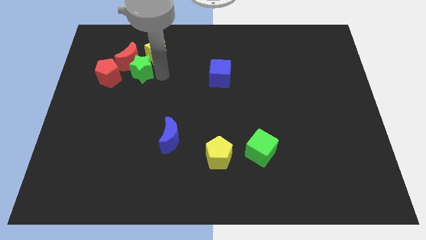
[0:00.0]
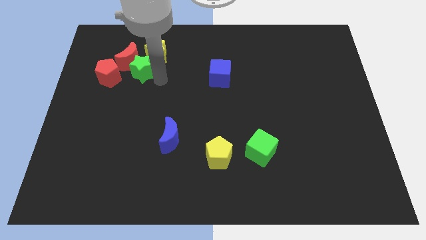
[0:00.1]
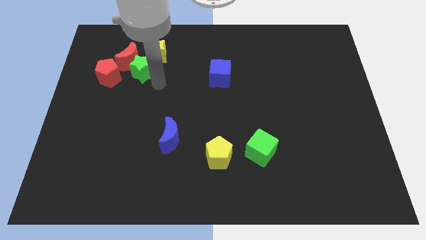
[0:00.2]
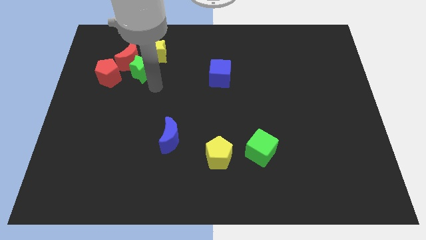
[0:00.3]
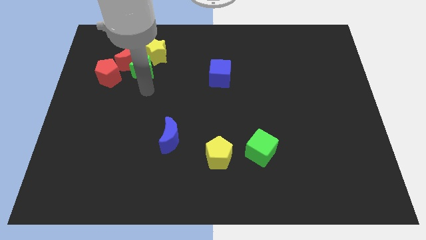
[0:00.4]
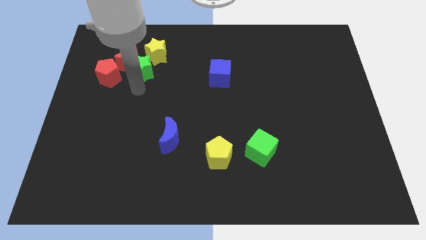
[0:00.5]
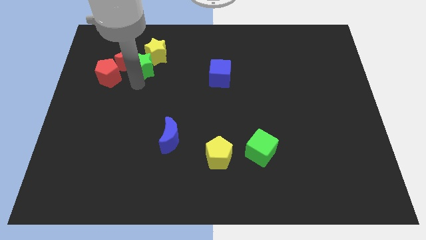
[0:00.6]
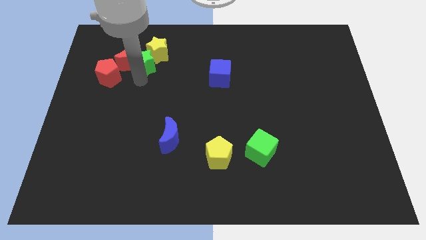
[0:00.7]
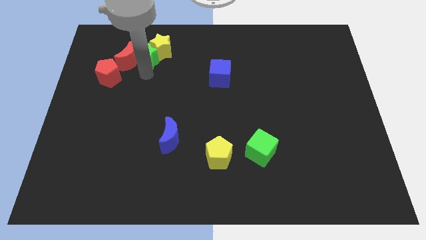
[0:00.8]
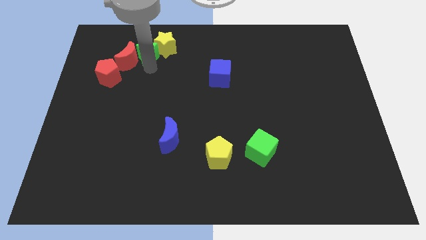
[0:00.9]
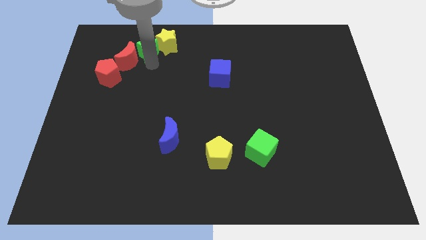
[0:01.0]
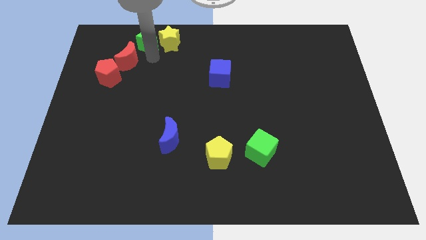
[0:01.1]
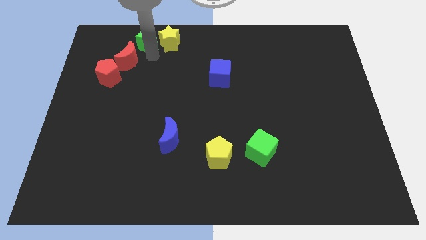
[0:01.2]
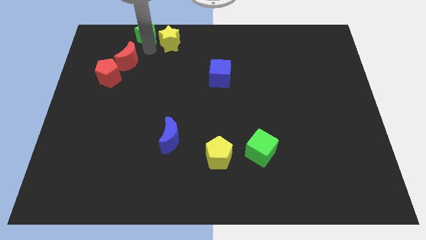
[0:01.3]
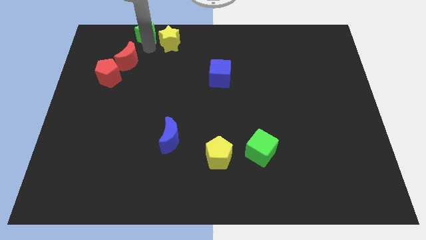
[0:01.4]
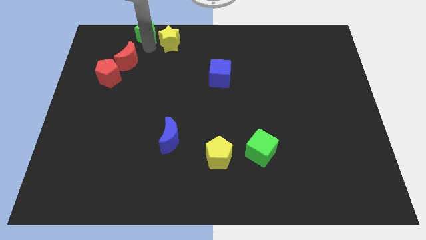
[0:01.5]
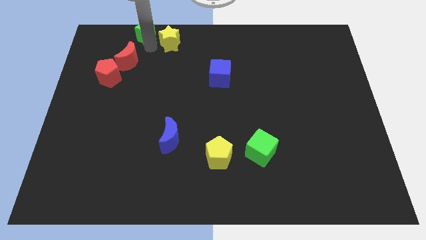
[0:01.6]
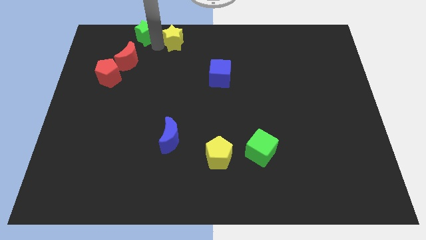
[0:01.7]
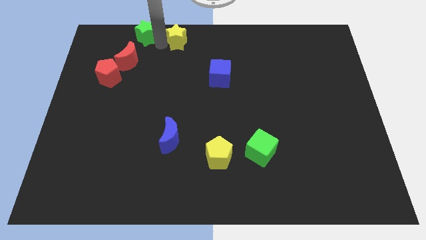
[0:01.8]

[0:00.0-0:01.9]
move the green star to the left of the yellow star

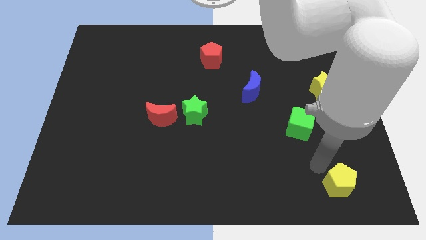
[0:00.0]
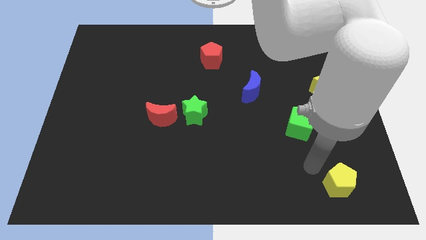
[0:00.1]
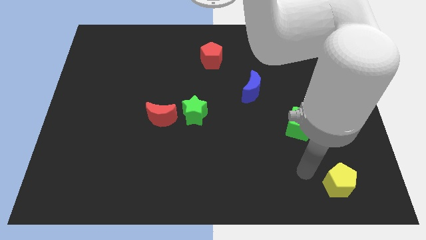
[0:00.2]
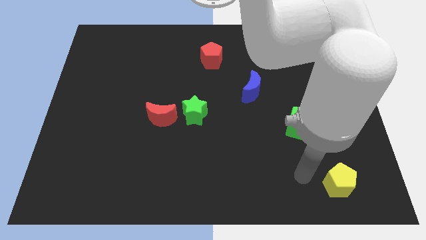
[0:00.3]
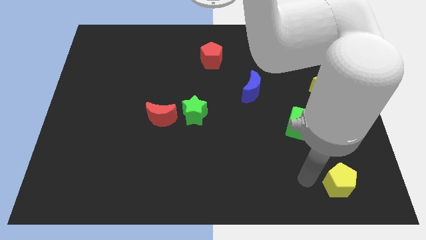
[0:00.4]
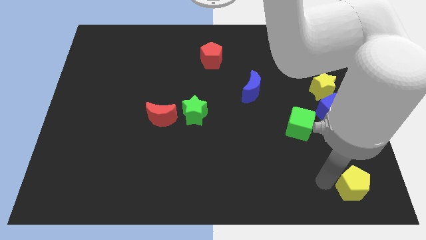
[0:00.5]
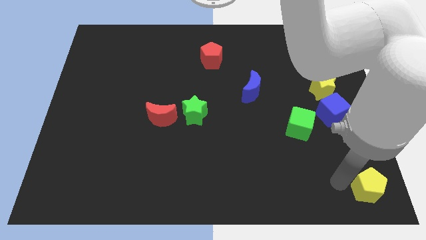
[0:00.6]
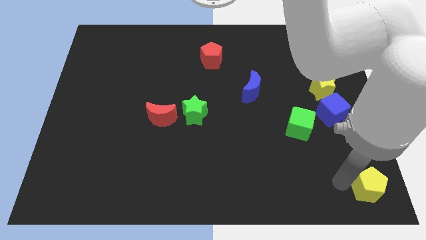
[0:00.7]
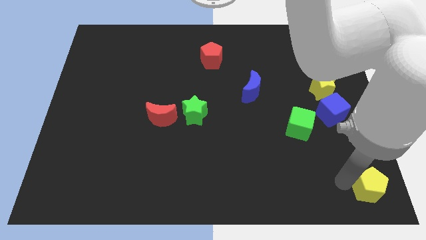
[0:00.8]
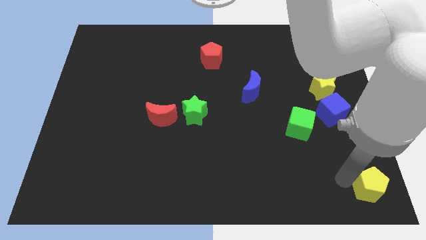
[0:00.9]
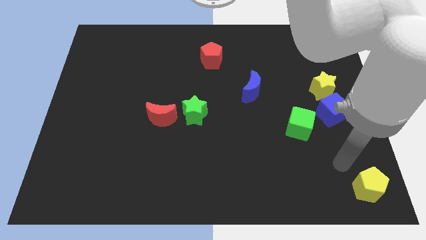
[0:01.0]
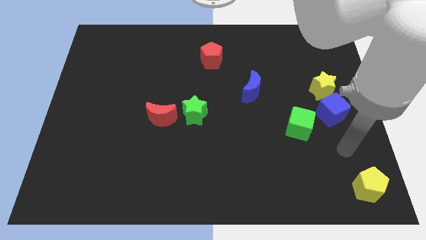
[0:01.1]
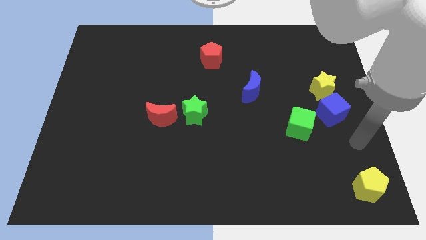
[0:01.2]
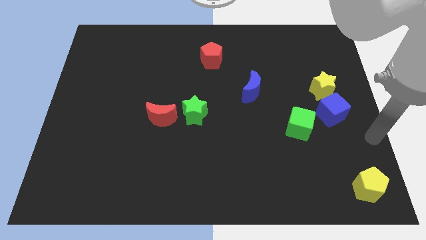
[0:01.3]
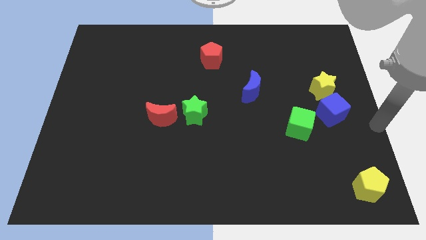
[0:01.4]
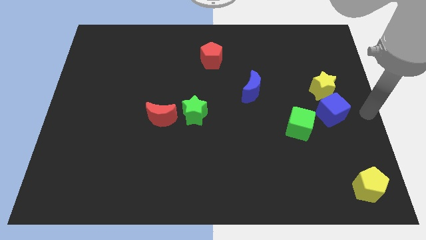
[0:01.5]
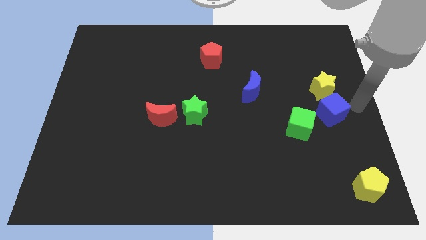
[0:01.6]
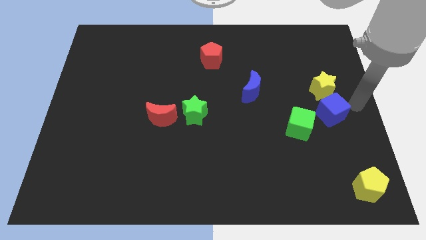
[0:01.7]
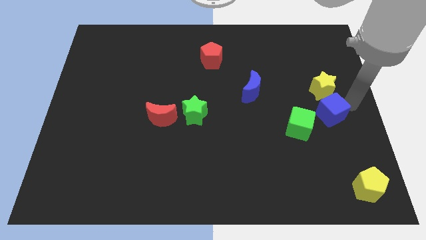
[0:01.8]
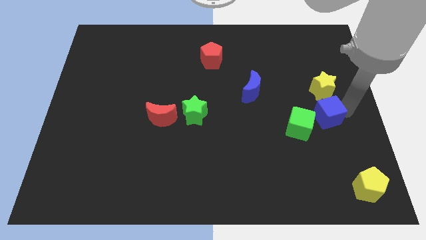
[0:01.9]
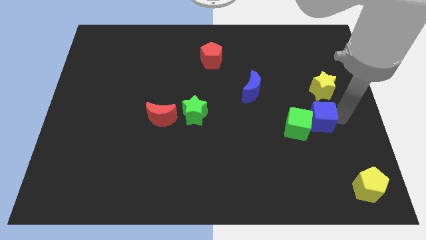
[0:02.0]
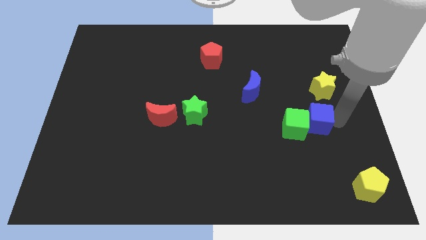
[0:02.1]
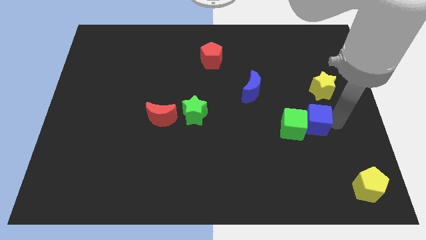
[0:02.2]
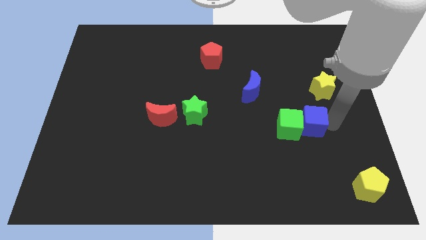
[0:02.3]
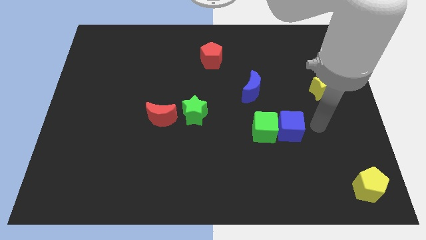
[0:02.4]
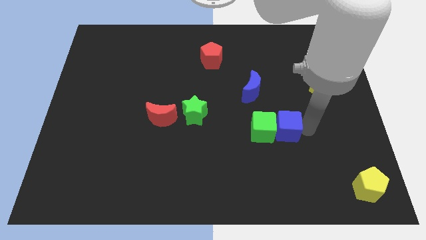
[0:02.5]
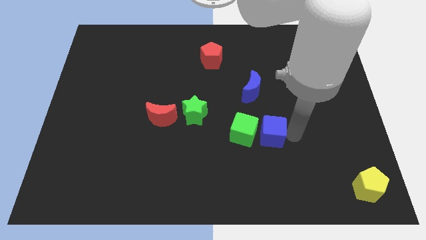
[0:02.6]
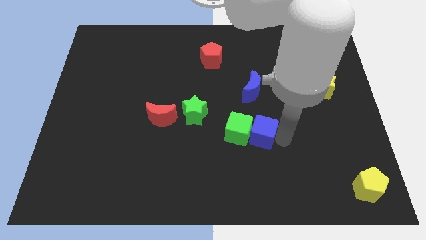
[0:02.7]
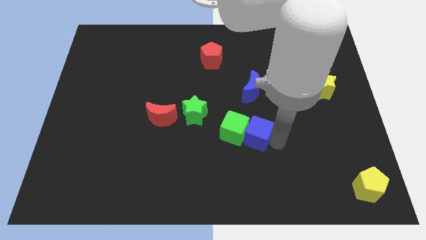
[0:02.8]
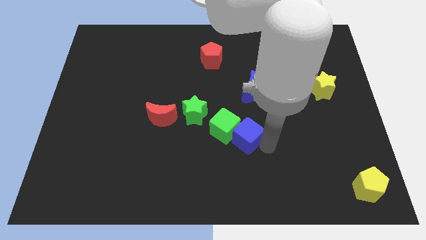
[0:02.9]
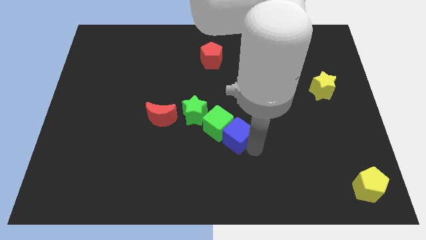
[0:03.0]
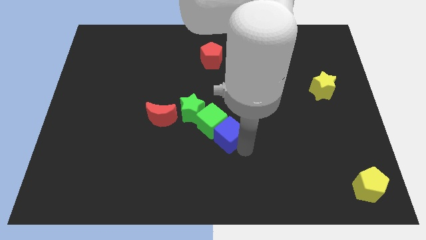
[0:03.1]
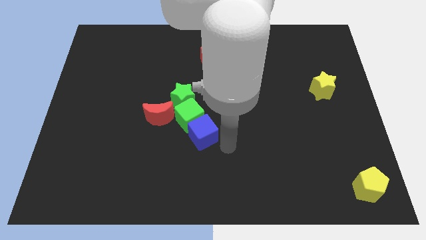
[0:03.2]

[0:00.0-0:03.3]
push the green cube and blue cube to the center

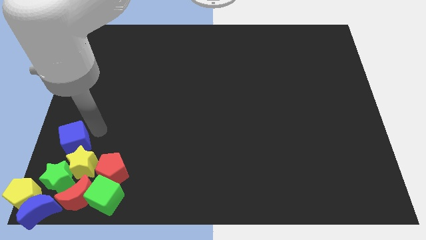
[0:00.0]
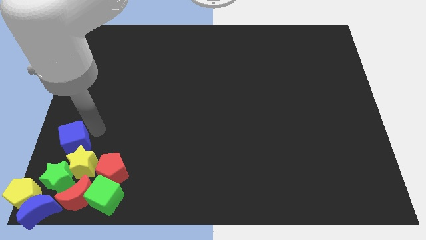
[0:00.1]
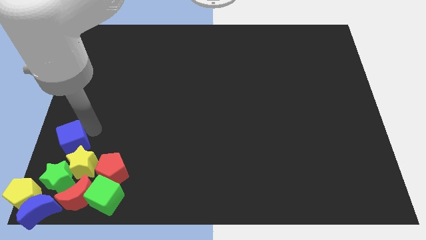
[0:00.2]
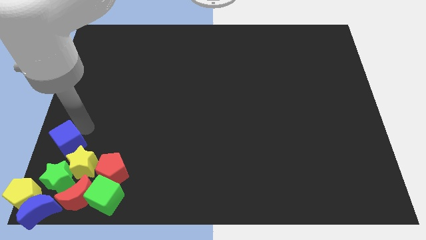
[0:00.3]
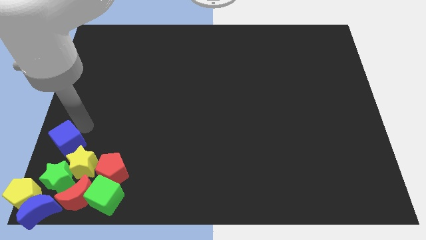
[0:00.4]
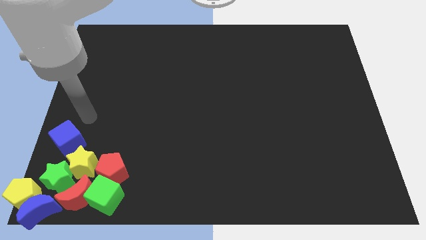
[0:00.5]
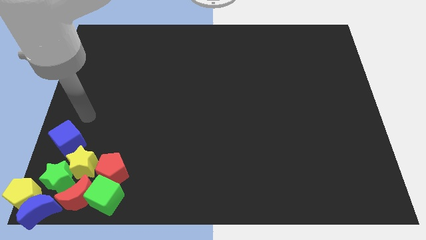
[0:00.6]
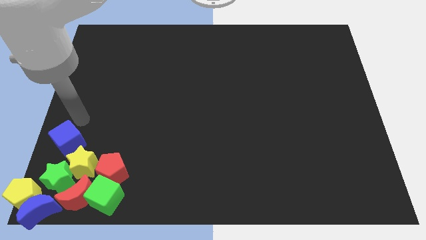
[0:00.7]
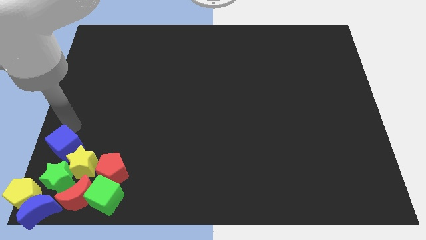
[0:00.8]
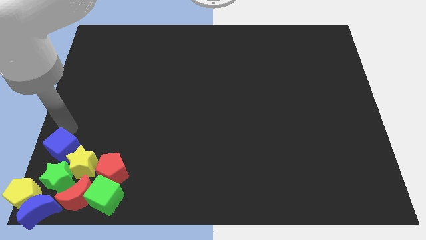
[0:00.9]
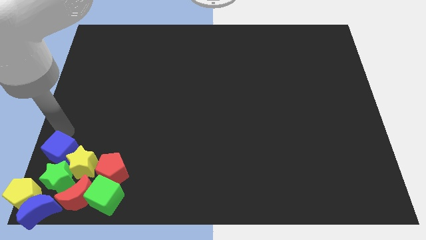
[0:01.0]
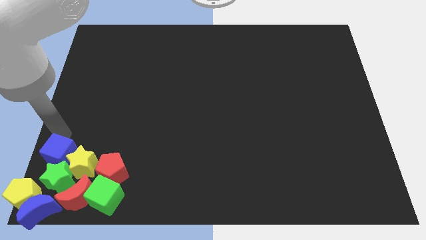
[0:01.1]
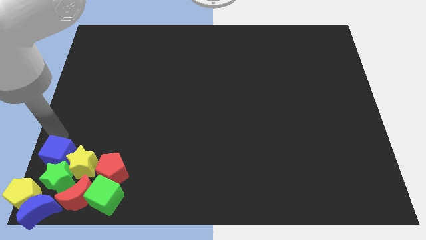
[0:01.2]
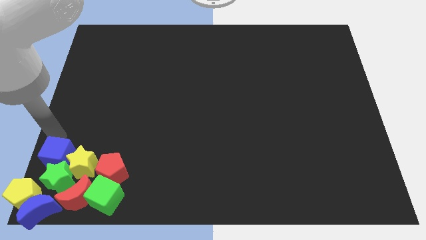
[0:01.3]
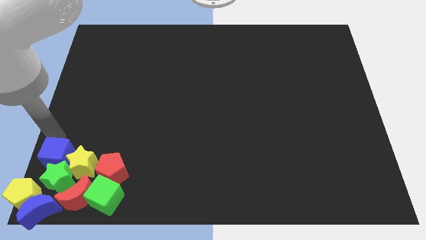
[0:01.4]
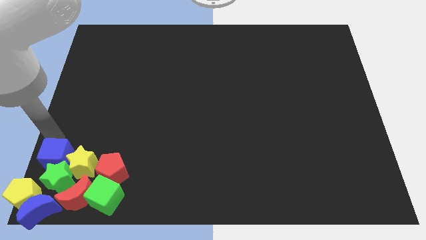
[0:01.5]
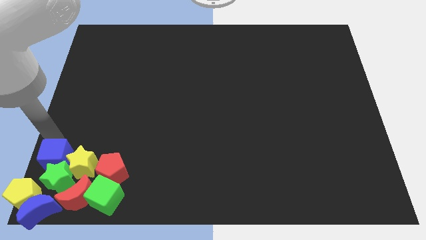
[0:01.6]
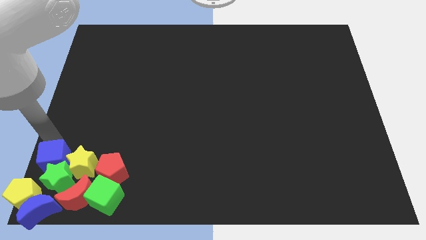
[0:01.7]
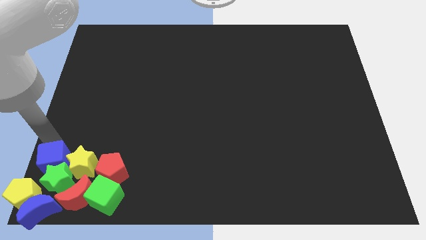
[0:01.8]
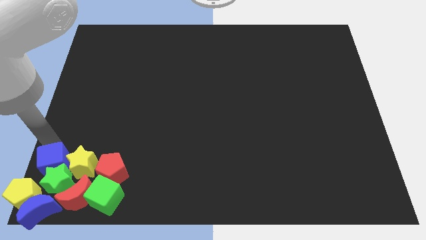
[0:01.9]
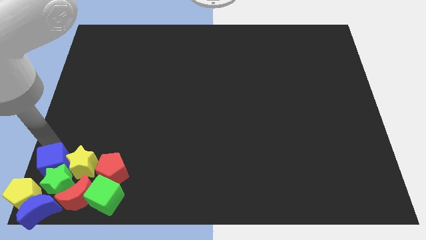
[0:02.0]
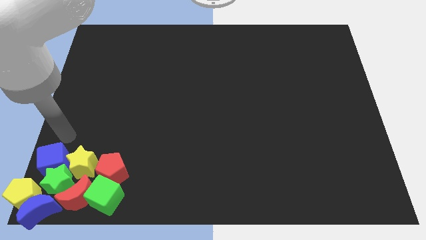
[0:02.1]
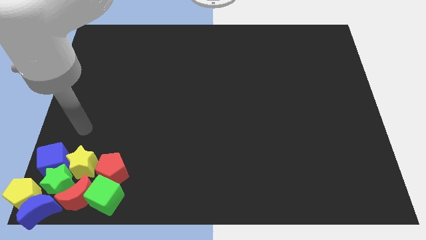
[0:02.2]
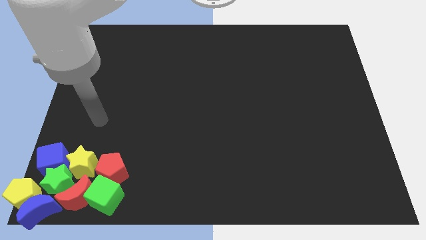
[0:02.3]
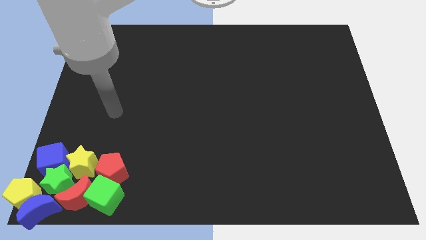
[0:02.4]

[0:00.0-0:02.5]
move the blue cube to the top side of green star

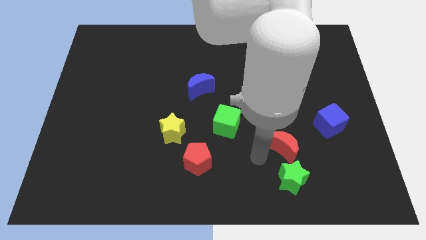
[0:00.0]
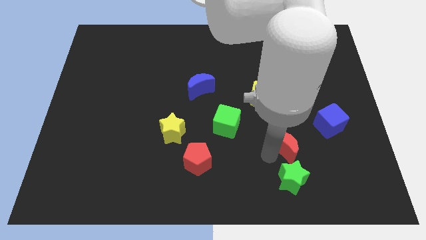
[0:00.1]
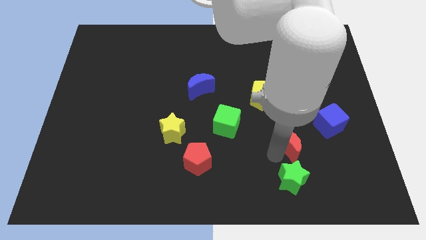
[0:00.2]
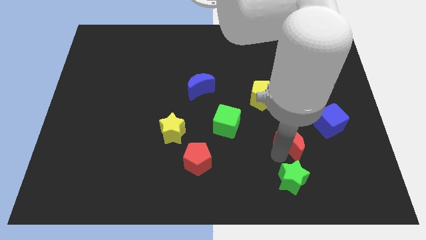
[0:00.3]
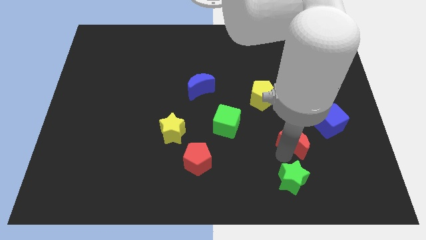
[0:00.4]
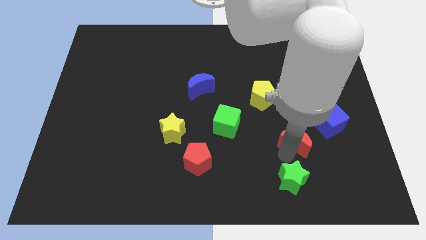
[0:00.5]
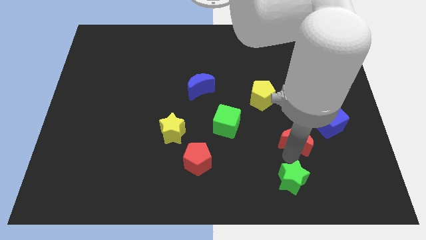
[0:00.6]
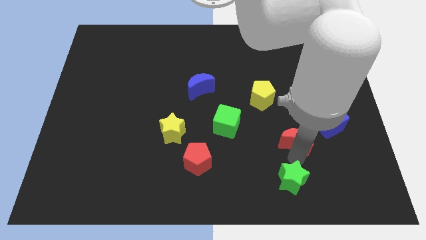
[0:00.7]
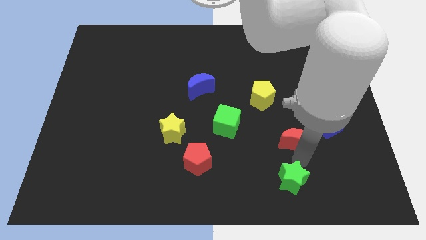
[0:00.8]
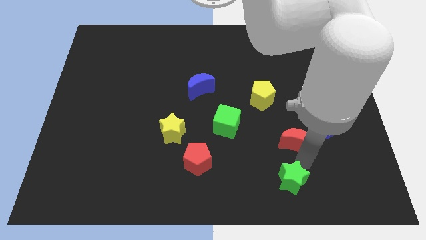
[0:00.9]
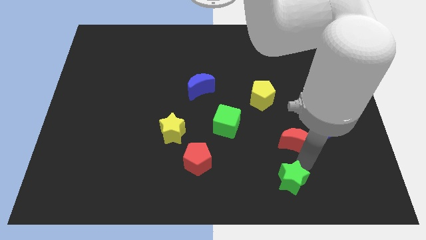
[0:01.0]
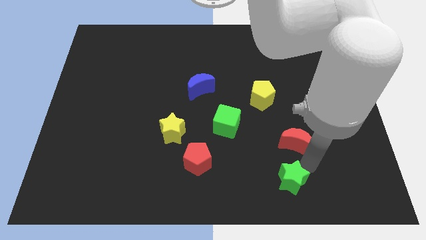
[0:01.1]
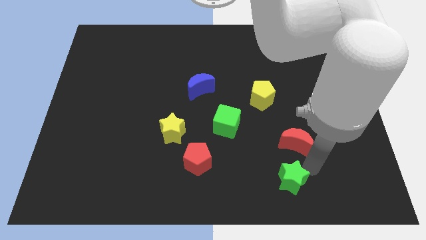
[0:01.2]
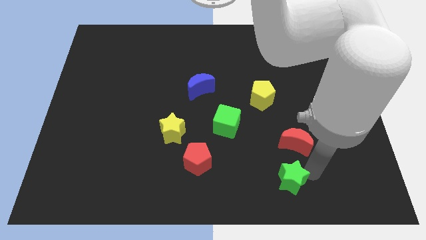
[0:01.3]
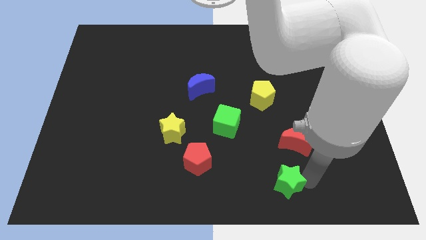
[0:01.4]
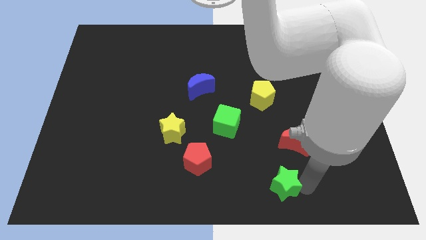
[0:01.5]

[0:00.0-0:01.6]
slide the red crescent vertically above the green star
